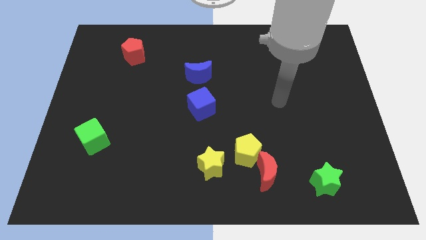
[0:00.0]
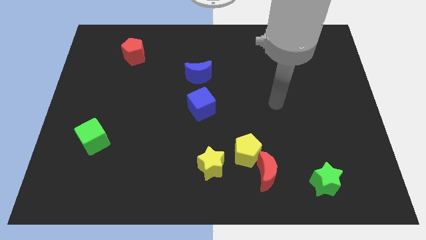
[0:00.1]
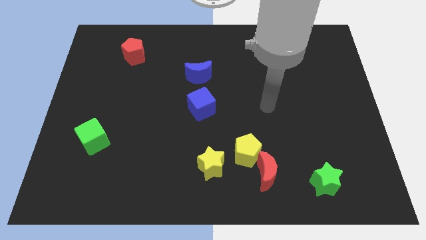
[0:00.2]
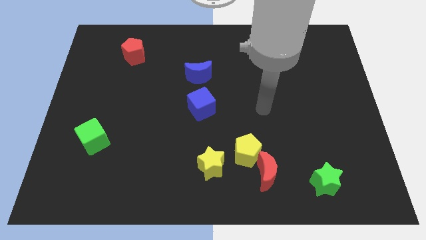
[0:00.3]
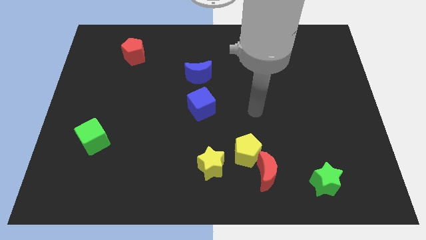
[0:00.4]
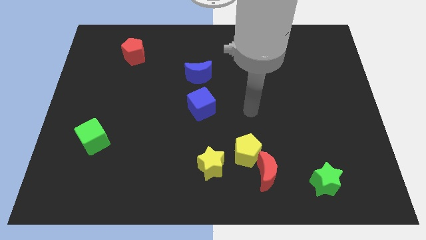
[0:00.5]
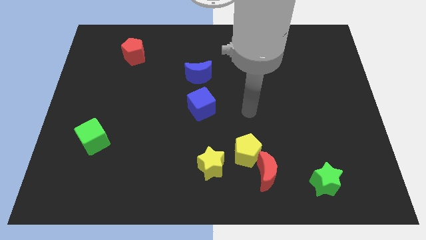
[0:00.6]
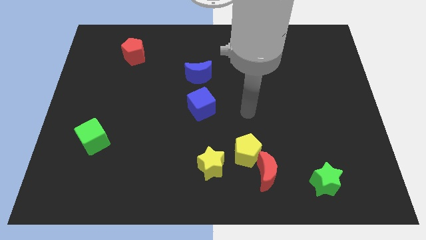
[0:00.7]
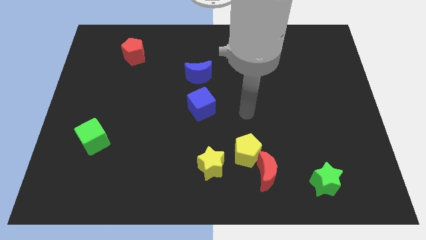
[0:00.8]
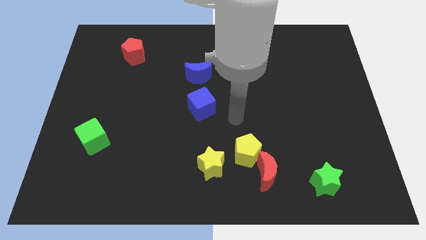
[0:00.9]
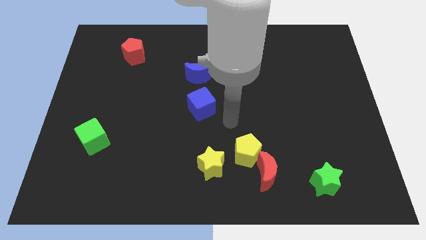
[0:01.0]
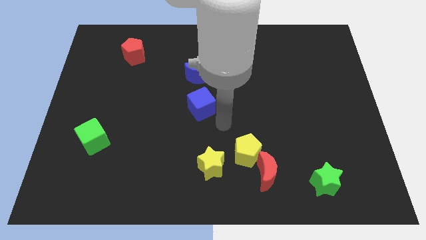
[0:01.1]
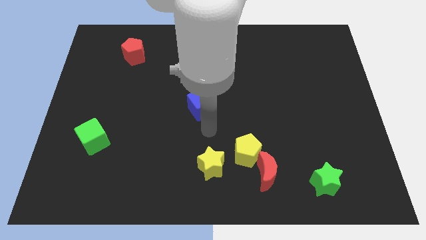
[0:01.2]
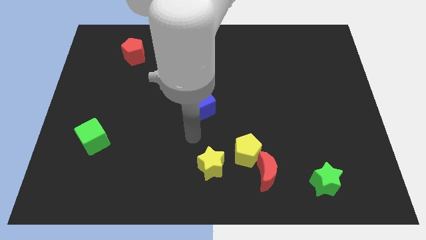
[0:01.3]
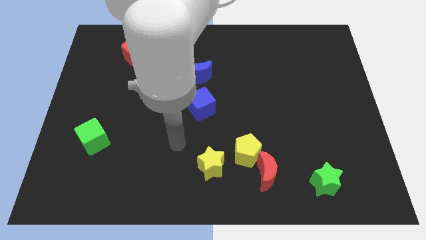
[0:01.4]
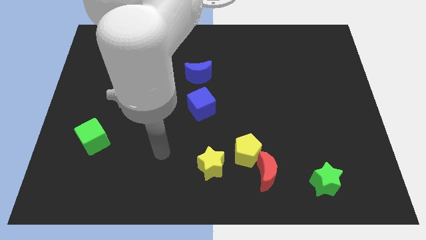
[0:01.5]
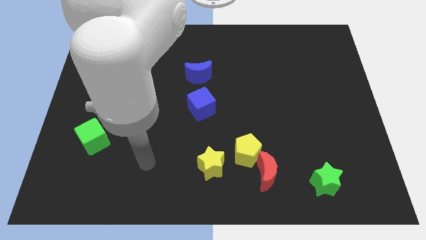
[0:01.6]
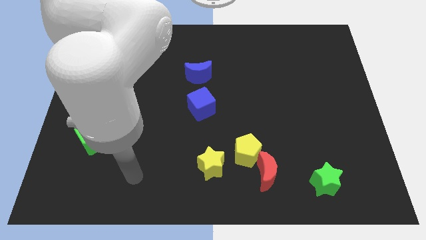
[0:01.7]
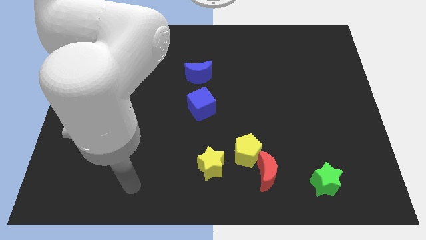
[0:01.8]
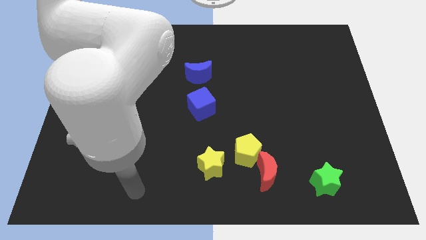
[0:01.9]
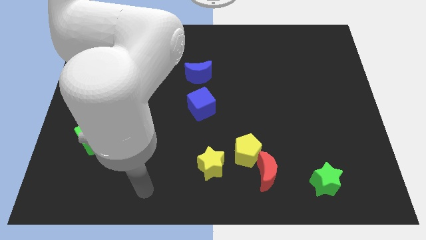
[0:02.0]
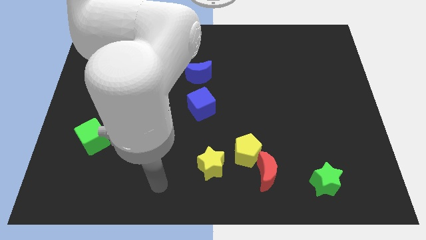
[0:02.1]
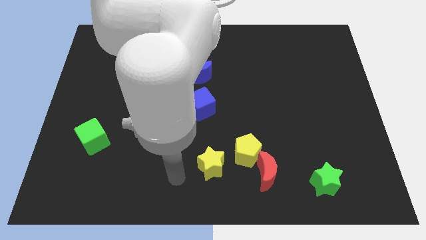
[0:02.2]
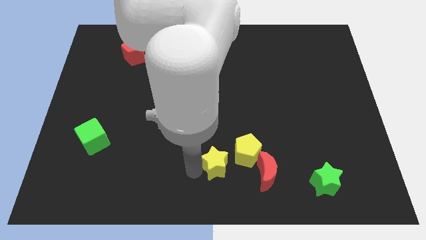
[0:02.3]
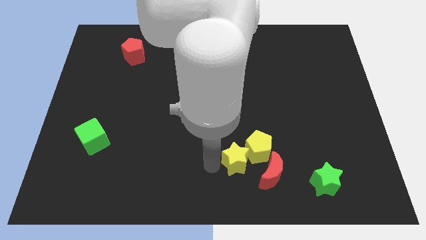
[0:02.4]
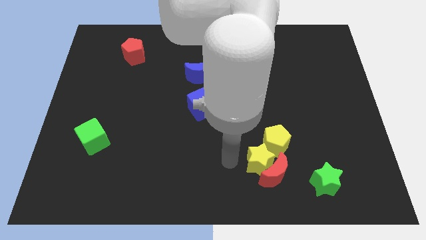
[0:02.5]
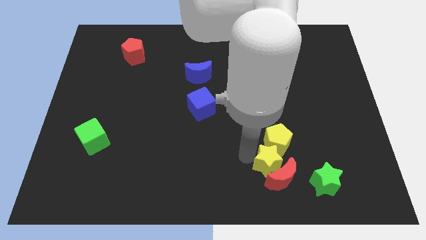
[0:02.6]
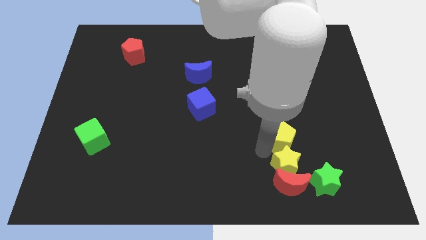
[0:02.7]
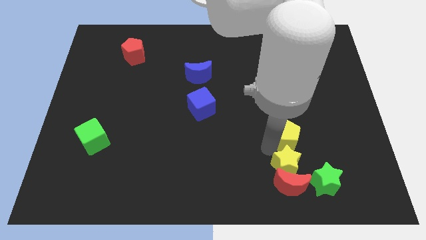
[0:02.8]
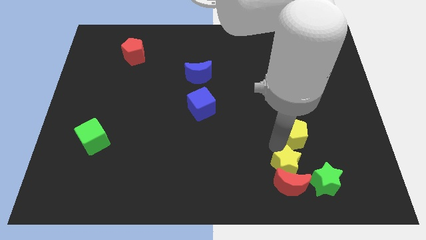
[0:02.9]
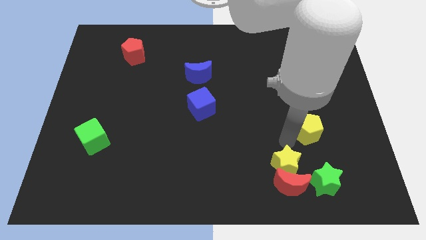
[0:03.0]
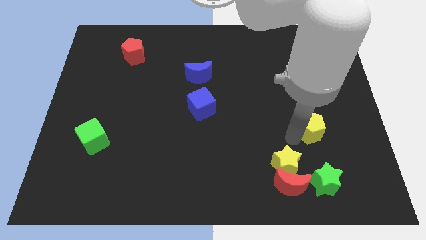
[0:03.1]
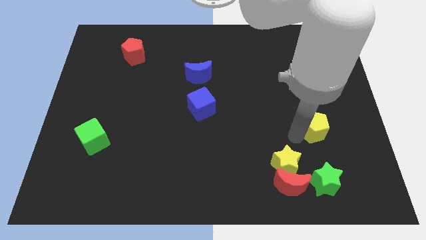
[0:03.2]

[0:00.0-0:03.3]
move yellow pentagon slightly right

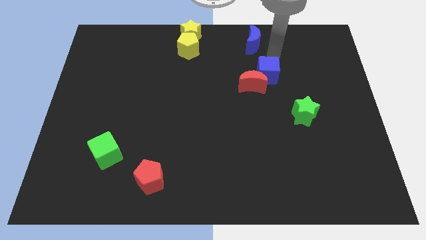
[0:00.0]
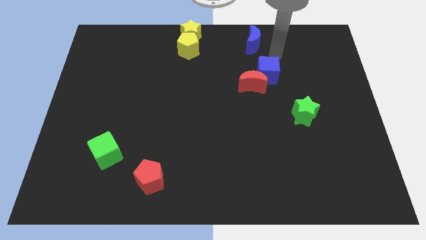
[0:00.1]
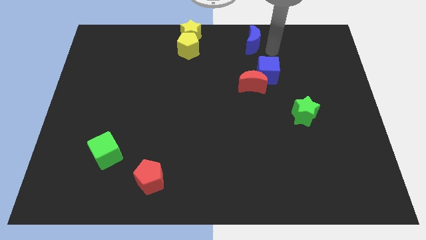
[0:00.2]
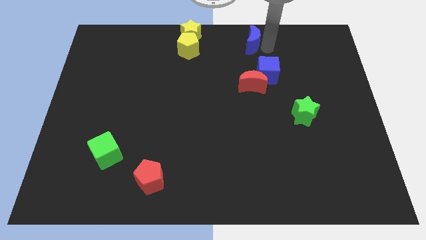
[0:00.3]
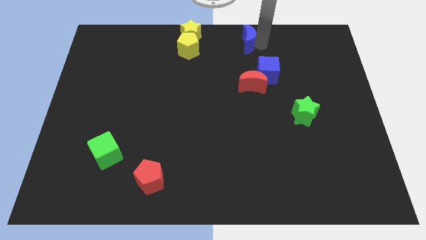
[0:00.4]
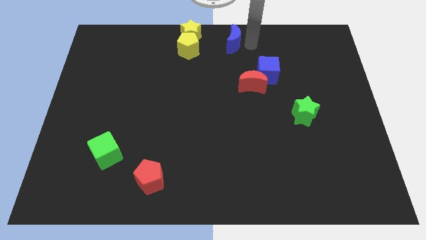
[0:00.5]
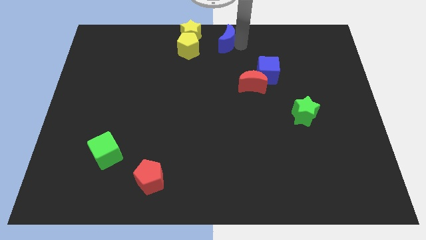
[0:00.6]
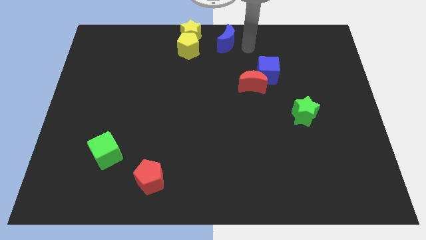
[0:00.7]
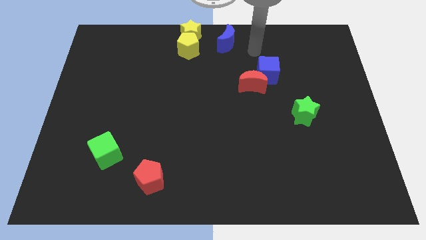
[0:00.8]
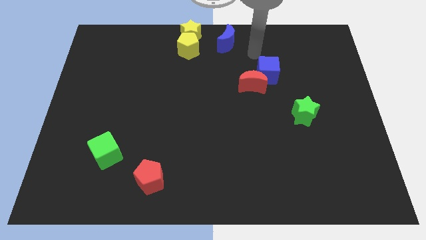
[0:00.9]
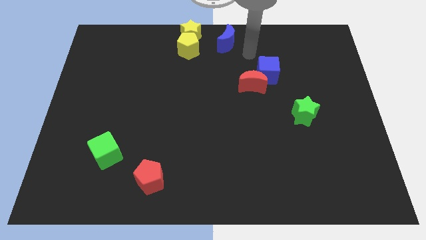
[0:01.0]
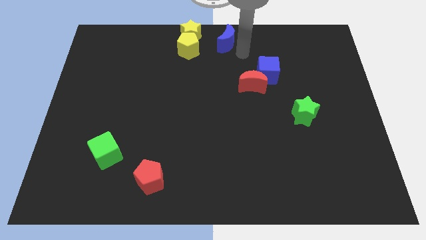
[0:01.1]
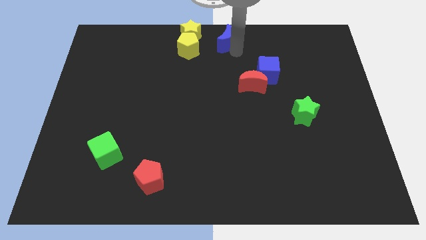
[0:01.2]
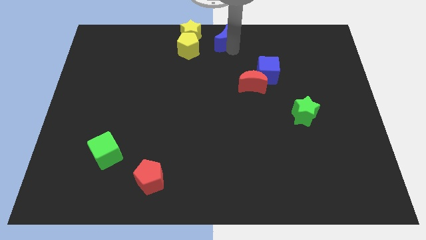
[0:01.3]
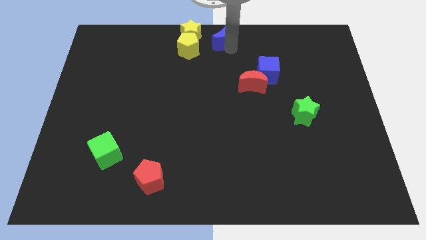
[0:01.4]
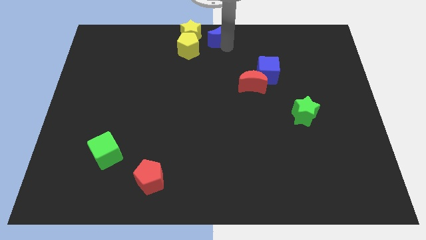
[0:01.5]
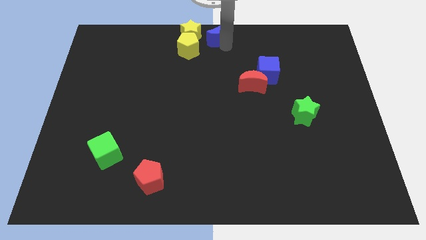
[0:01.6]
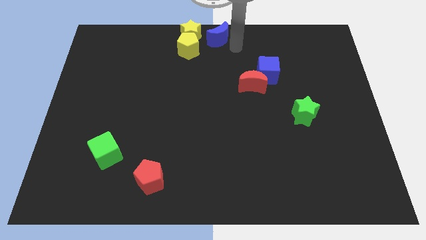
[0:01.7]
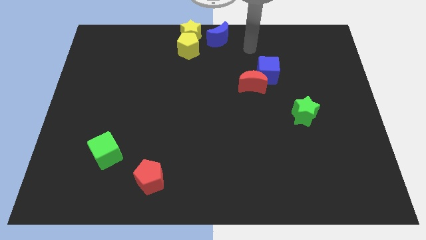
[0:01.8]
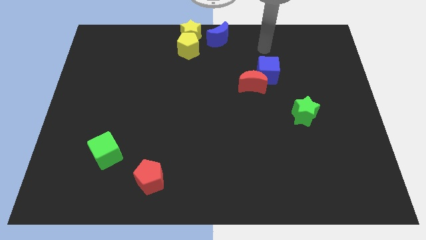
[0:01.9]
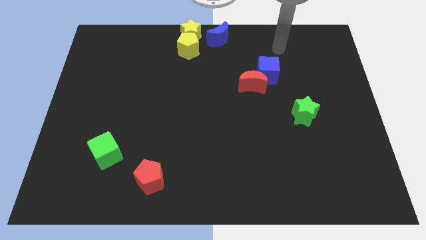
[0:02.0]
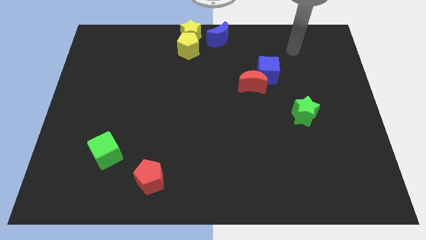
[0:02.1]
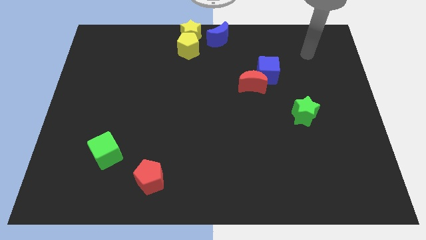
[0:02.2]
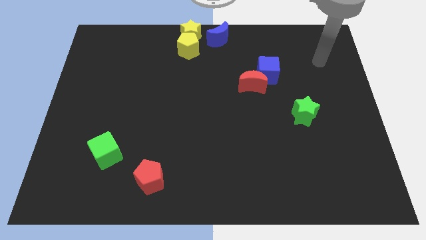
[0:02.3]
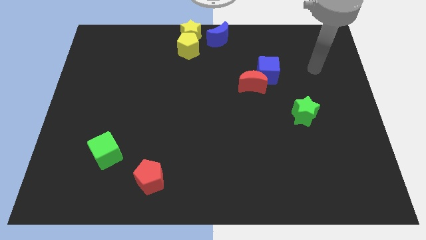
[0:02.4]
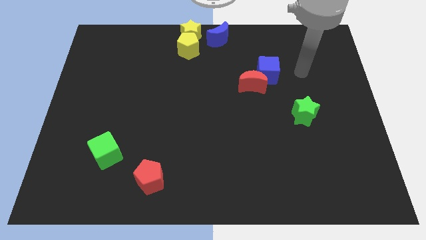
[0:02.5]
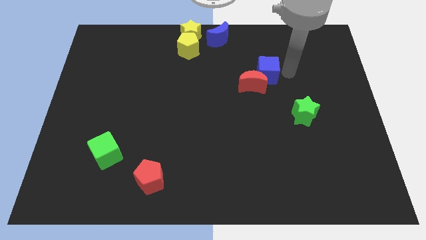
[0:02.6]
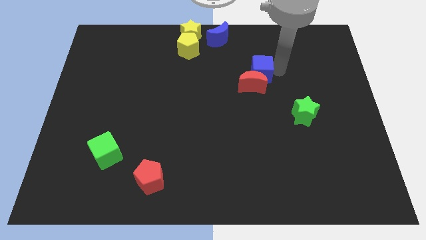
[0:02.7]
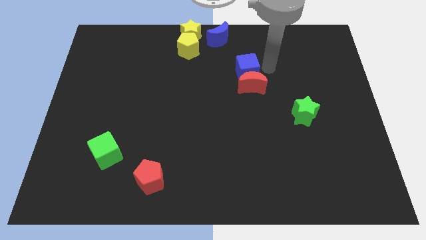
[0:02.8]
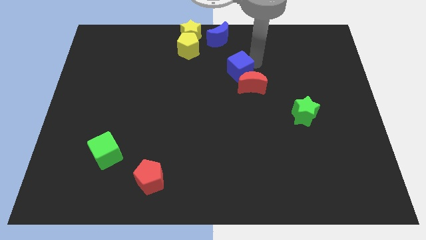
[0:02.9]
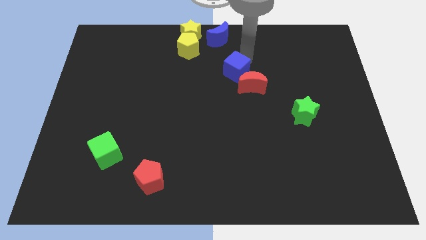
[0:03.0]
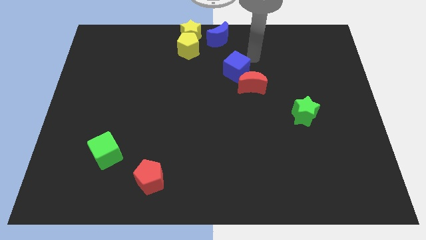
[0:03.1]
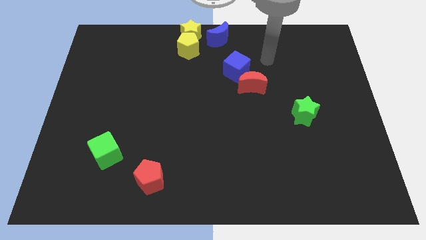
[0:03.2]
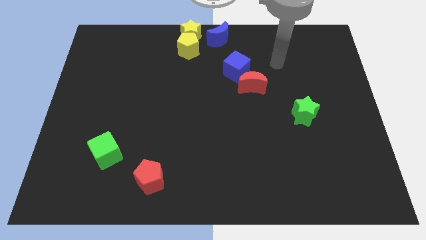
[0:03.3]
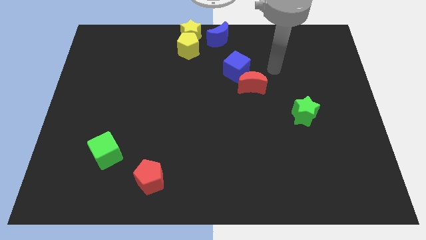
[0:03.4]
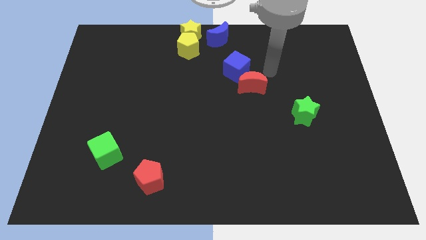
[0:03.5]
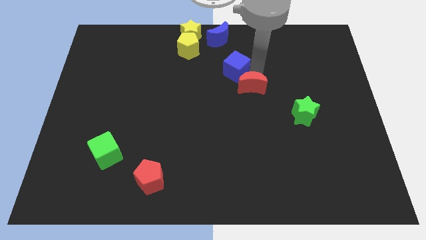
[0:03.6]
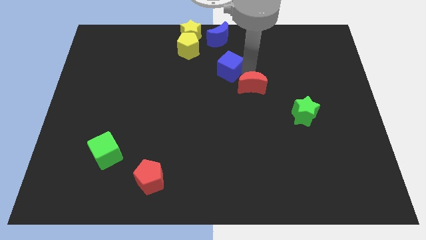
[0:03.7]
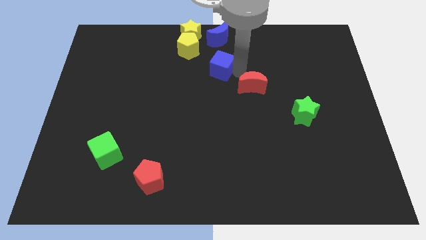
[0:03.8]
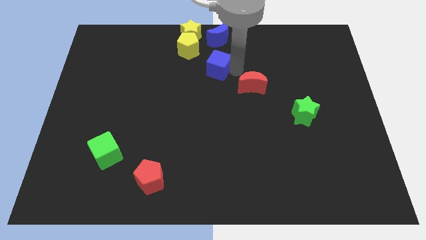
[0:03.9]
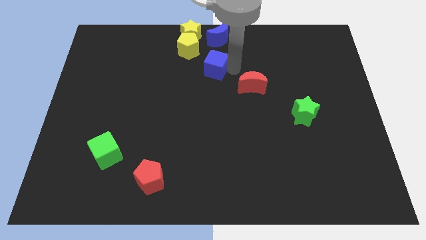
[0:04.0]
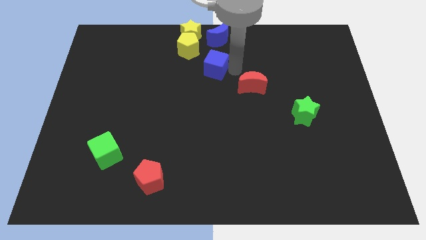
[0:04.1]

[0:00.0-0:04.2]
place blue moon at the top center of the board

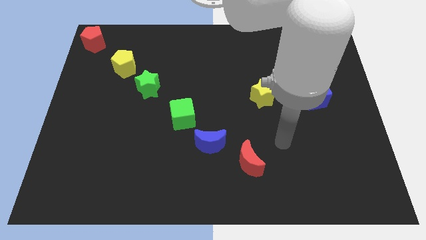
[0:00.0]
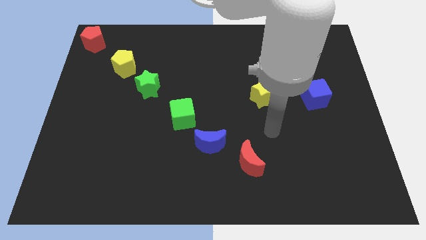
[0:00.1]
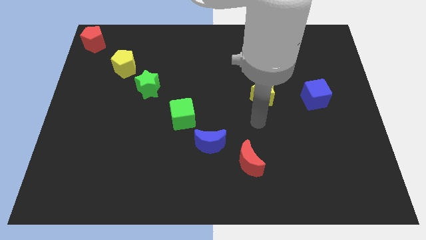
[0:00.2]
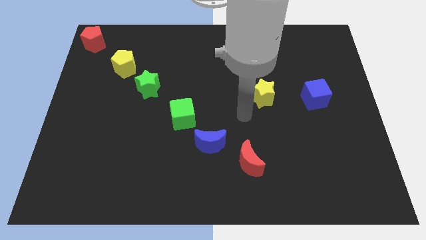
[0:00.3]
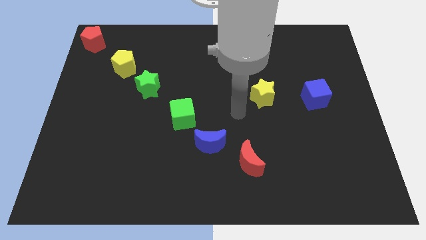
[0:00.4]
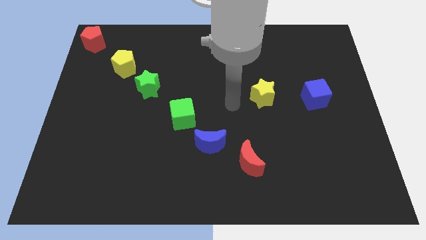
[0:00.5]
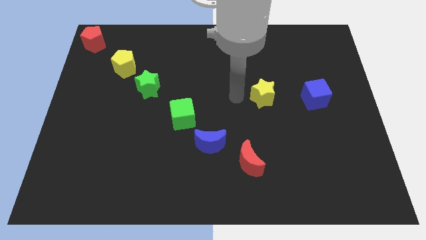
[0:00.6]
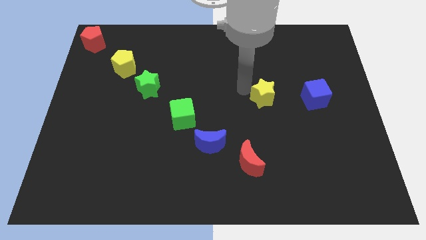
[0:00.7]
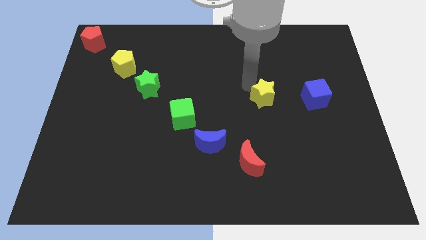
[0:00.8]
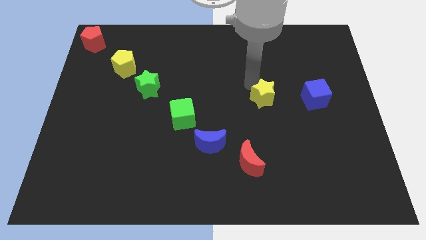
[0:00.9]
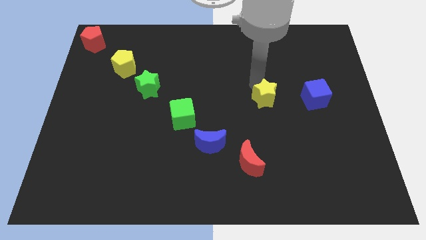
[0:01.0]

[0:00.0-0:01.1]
place the arm above the yellow star

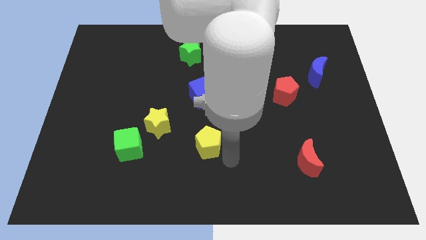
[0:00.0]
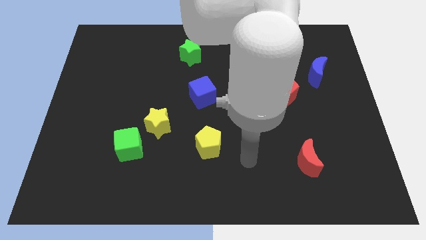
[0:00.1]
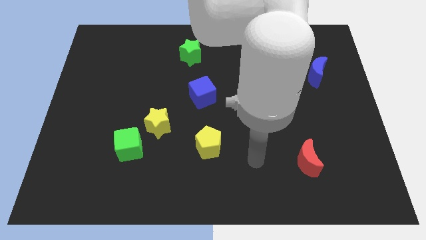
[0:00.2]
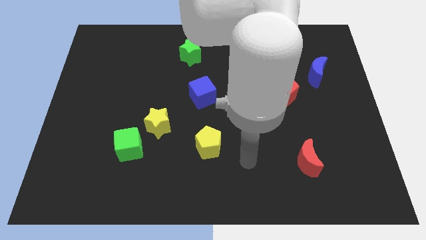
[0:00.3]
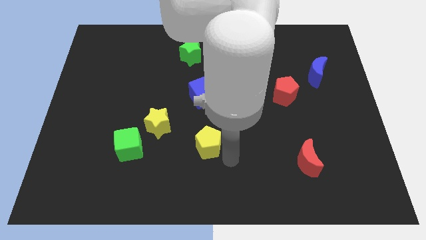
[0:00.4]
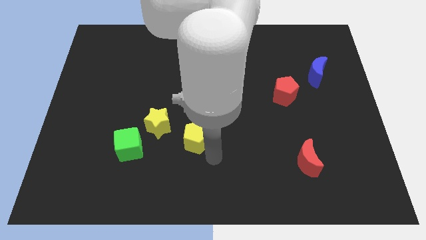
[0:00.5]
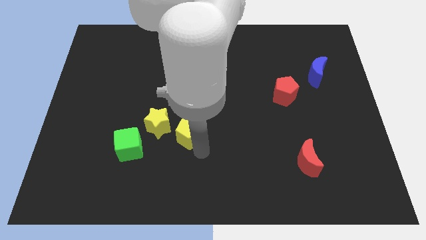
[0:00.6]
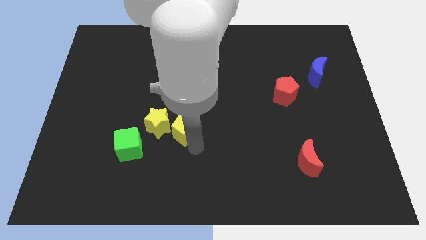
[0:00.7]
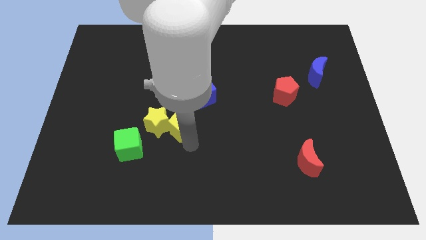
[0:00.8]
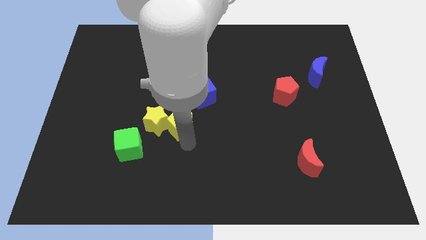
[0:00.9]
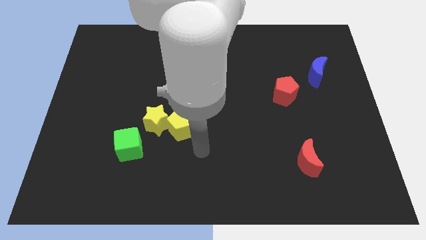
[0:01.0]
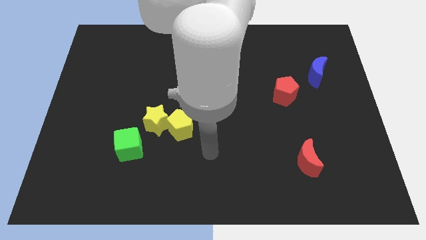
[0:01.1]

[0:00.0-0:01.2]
place the yellow pentagon beside the yellow star
